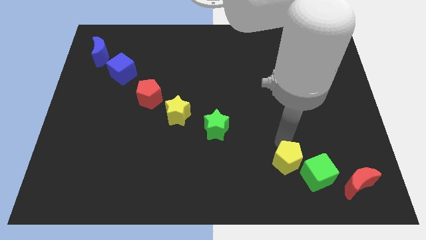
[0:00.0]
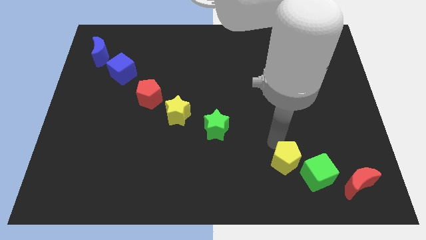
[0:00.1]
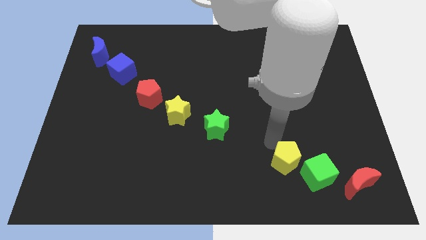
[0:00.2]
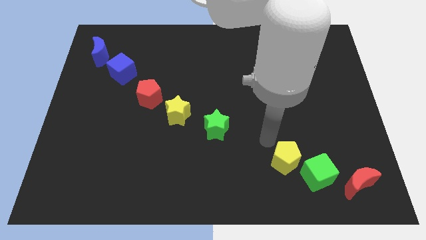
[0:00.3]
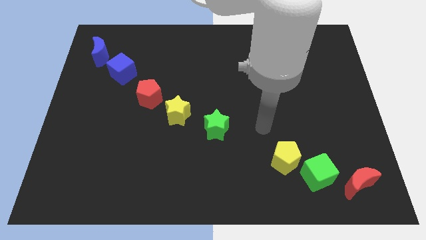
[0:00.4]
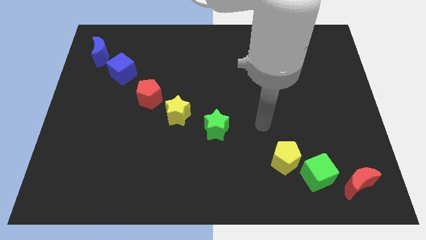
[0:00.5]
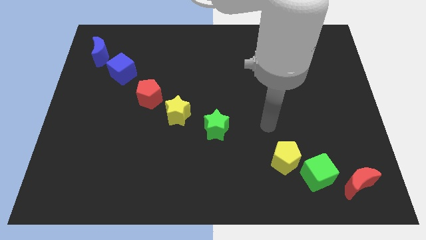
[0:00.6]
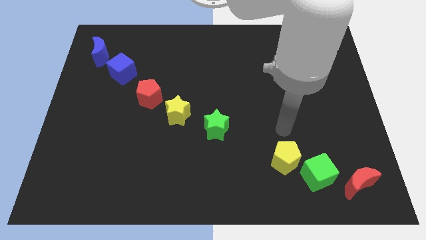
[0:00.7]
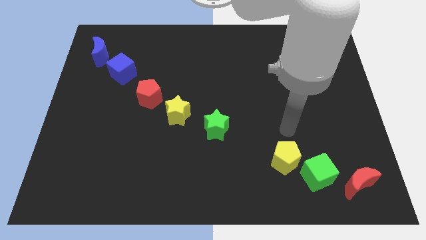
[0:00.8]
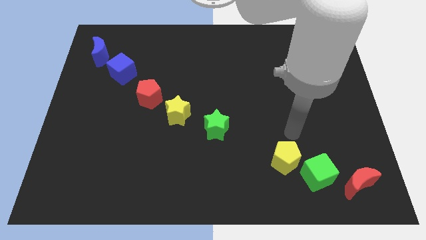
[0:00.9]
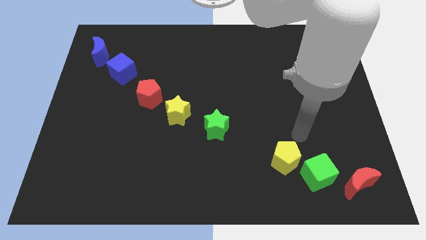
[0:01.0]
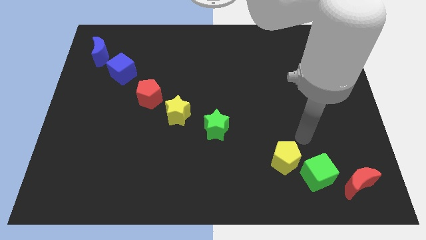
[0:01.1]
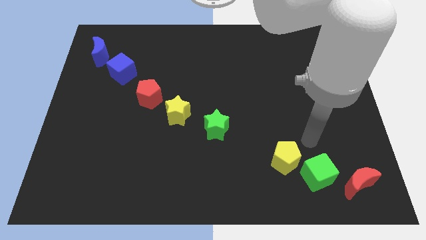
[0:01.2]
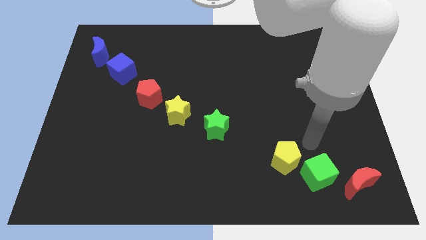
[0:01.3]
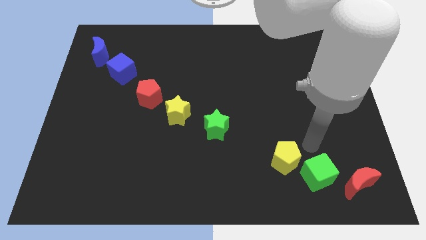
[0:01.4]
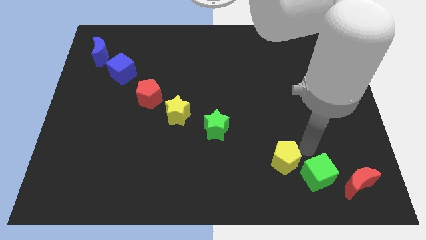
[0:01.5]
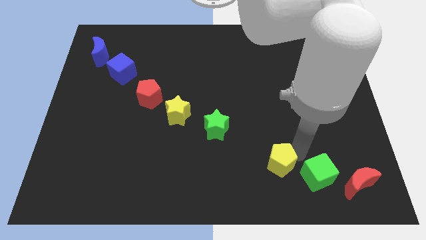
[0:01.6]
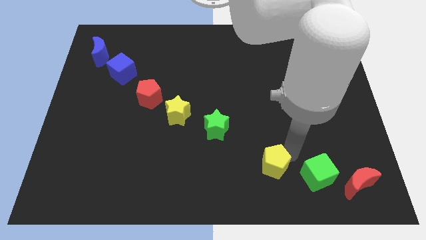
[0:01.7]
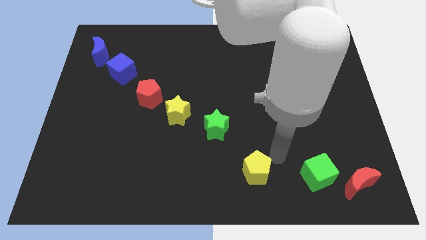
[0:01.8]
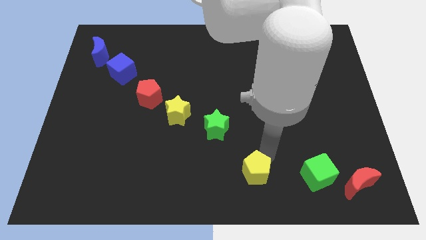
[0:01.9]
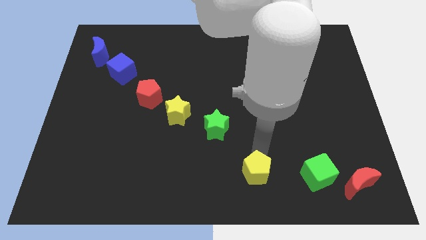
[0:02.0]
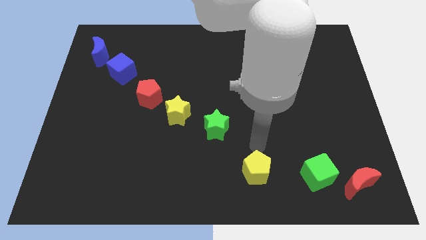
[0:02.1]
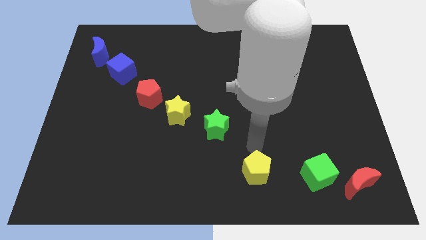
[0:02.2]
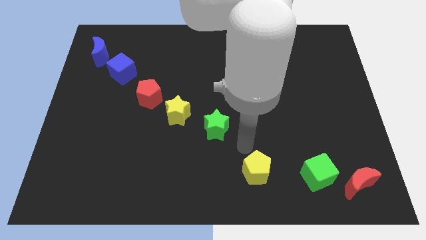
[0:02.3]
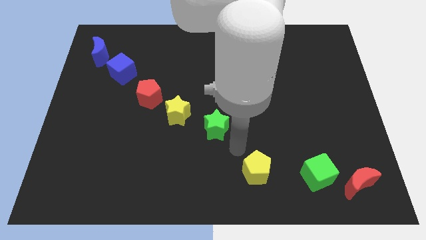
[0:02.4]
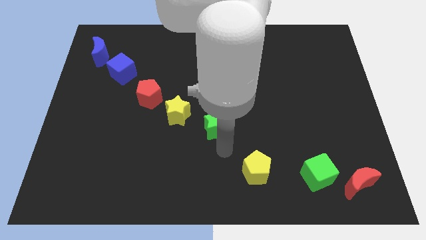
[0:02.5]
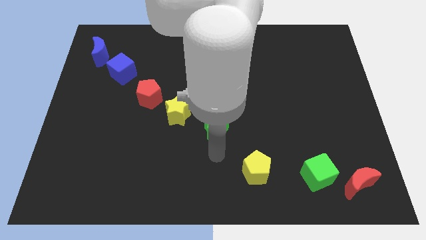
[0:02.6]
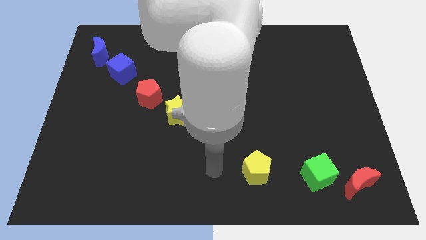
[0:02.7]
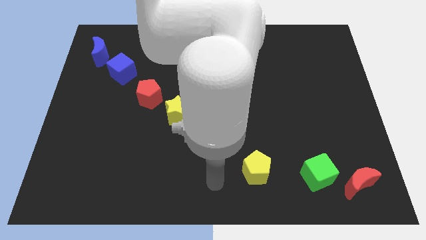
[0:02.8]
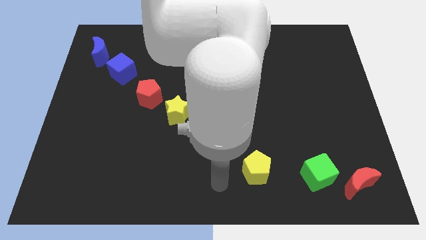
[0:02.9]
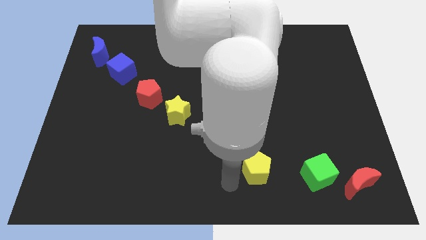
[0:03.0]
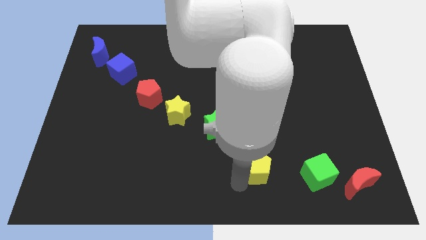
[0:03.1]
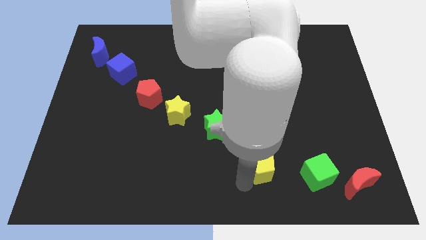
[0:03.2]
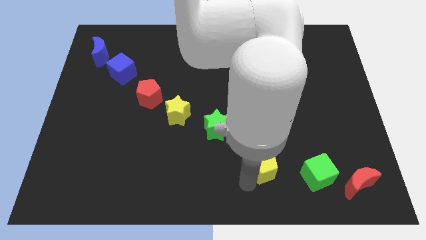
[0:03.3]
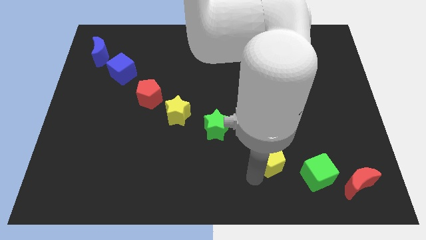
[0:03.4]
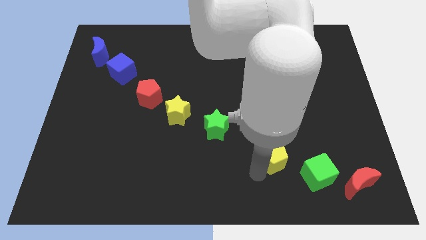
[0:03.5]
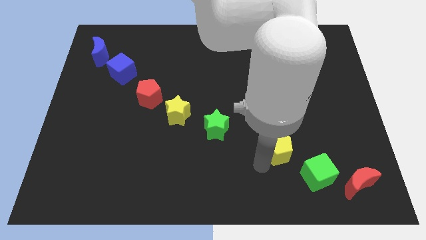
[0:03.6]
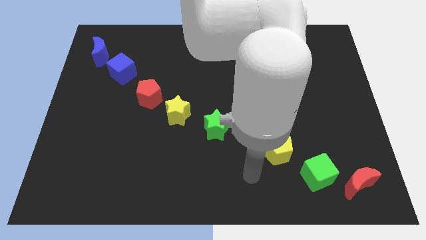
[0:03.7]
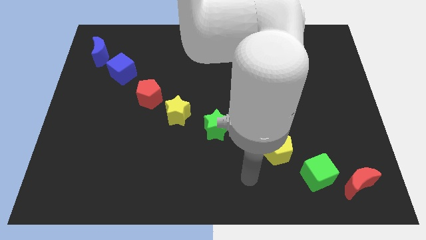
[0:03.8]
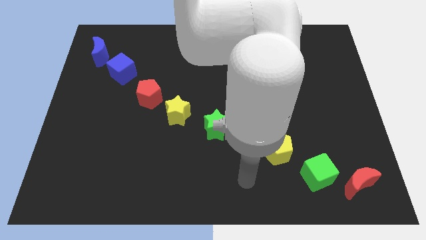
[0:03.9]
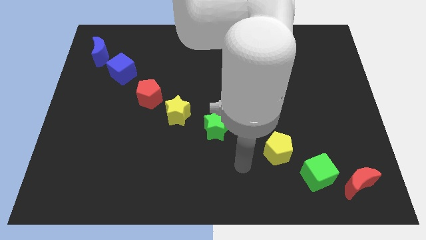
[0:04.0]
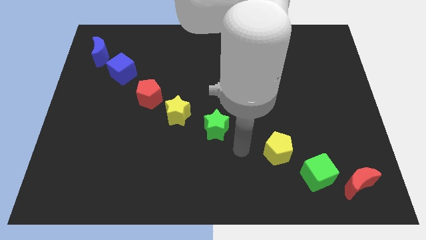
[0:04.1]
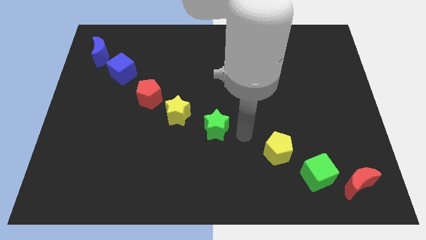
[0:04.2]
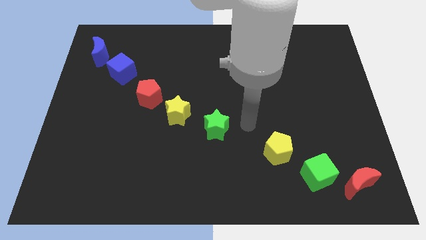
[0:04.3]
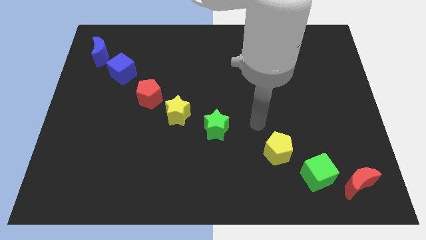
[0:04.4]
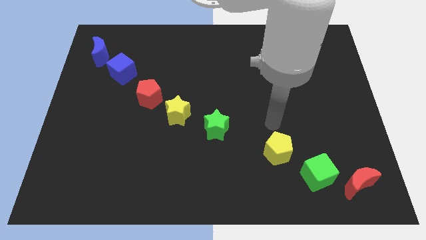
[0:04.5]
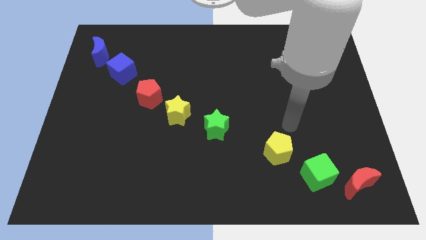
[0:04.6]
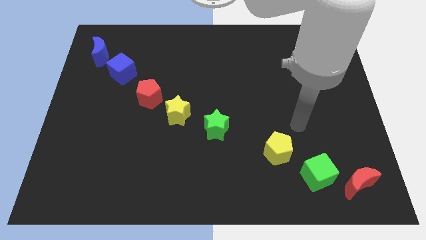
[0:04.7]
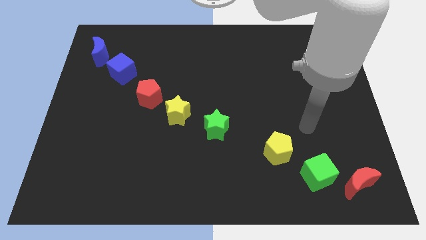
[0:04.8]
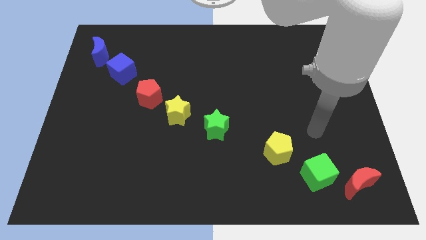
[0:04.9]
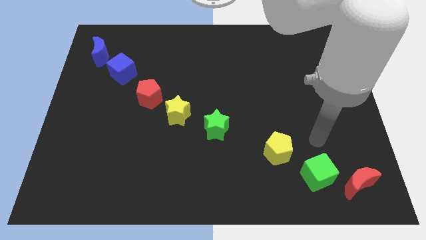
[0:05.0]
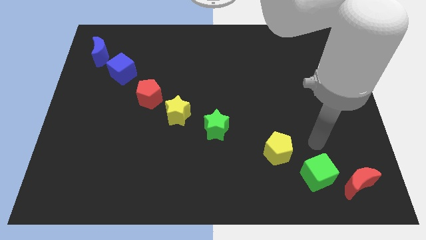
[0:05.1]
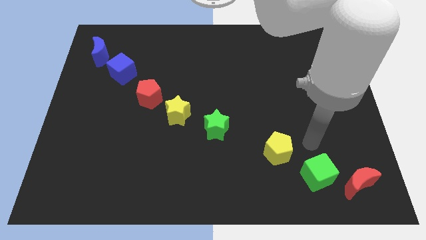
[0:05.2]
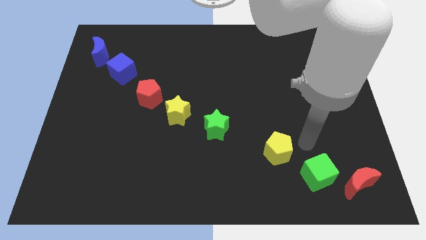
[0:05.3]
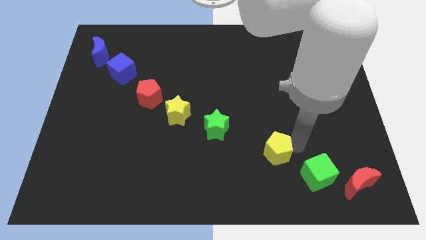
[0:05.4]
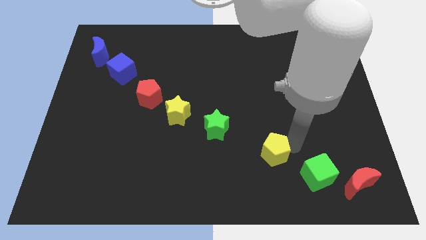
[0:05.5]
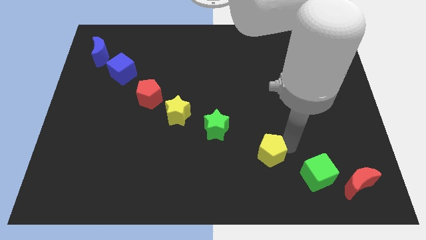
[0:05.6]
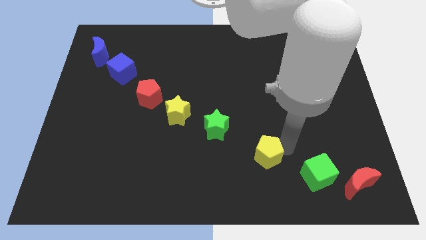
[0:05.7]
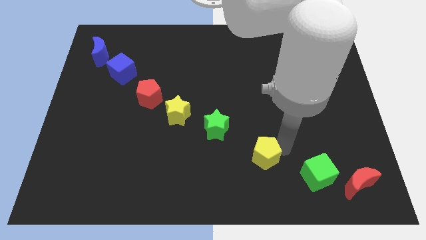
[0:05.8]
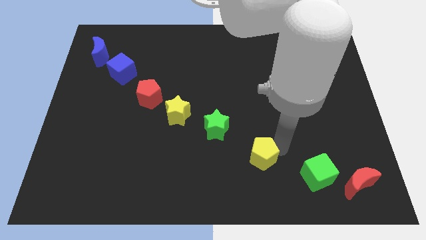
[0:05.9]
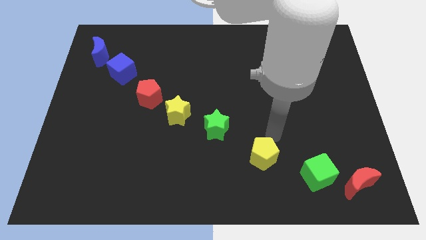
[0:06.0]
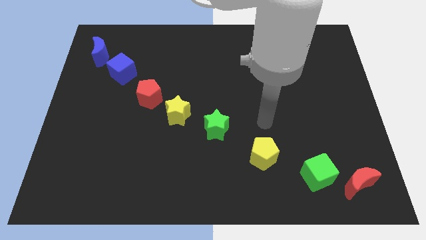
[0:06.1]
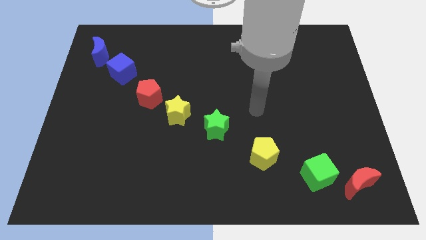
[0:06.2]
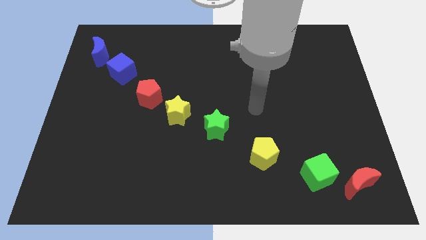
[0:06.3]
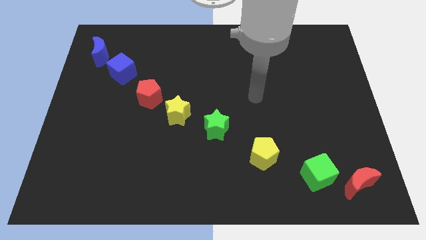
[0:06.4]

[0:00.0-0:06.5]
push the yellow pentagon in between the green blocks

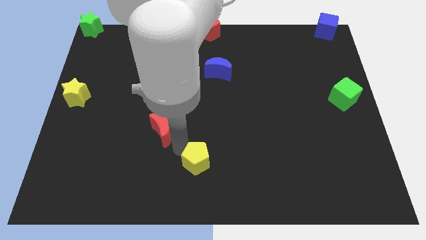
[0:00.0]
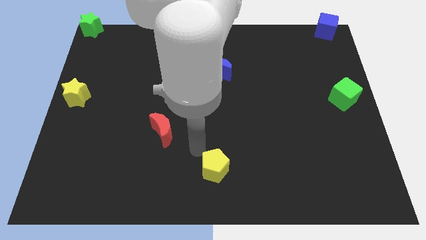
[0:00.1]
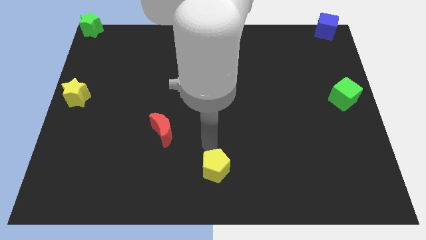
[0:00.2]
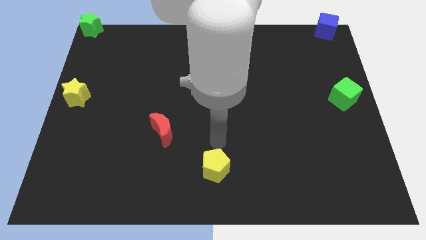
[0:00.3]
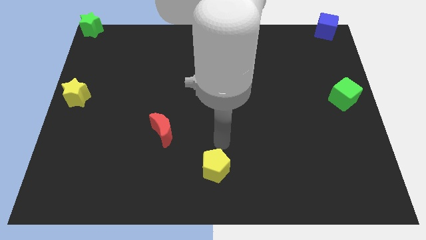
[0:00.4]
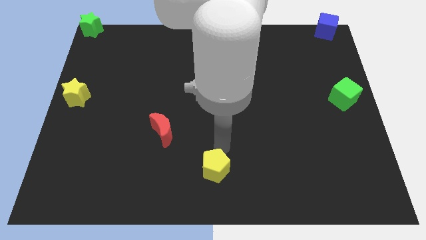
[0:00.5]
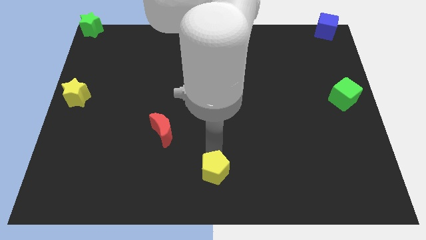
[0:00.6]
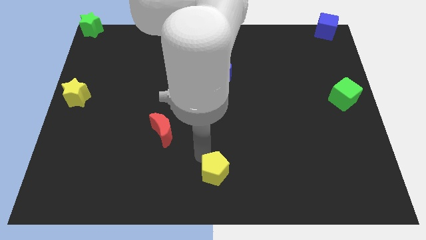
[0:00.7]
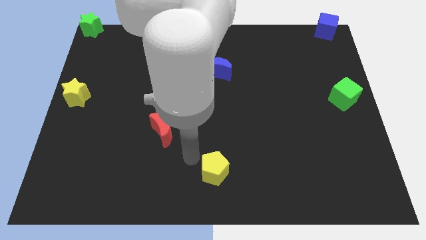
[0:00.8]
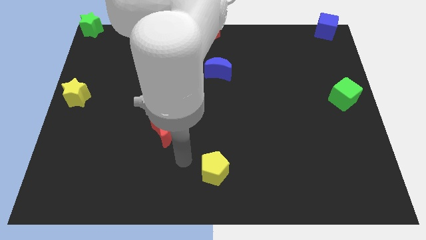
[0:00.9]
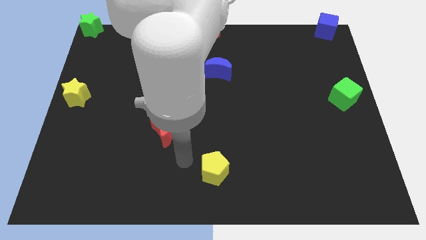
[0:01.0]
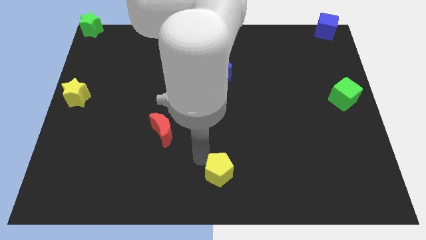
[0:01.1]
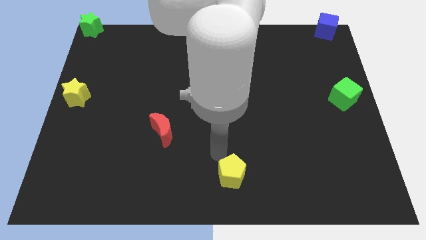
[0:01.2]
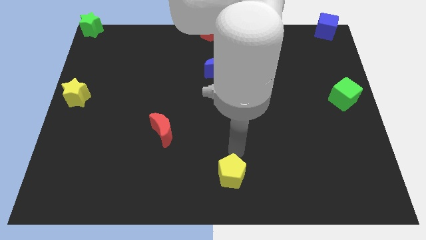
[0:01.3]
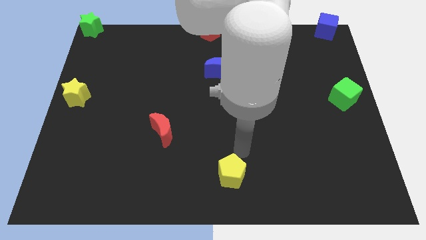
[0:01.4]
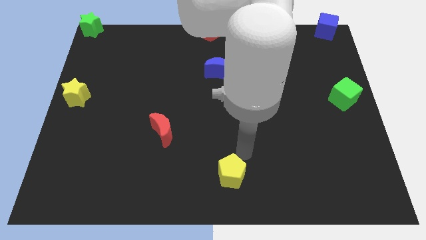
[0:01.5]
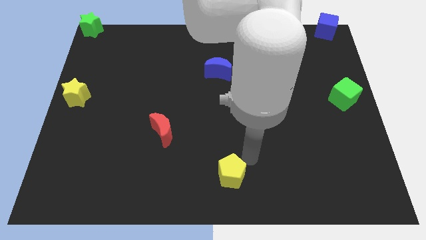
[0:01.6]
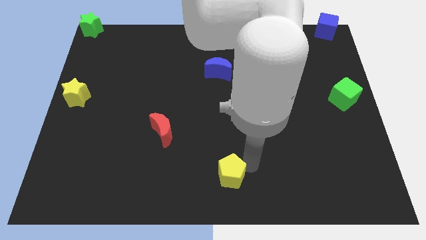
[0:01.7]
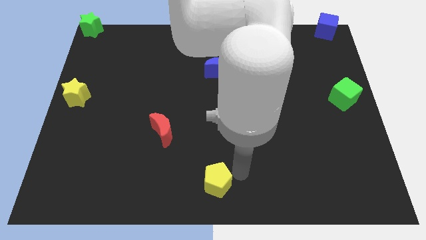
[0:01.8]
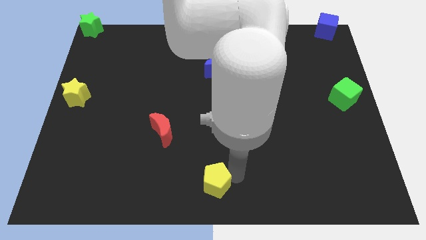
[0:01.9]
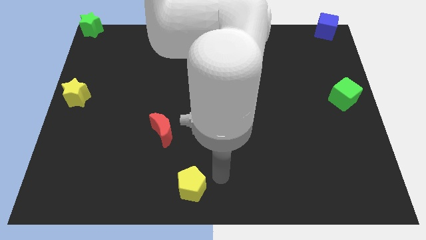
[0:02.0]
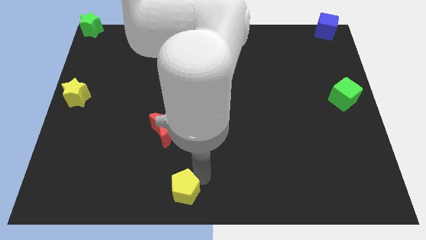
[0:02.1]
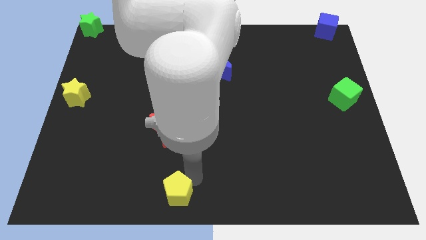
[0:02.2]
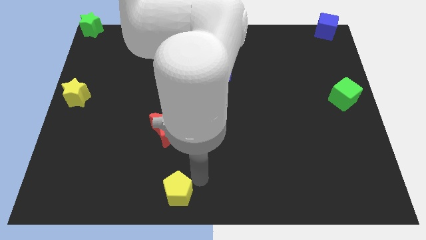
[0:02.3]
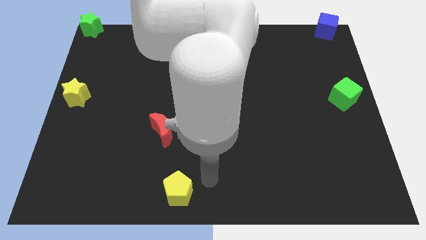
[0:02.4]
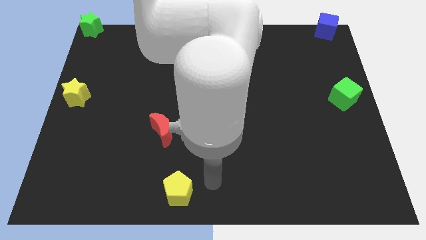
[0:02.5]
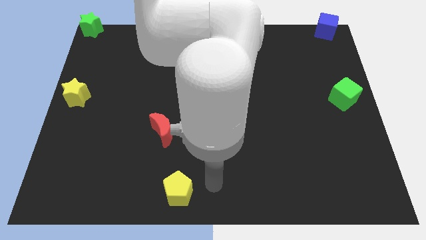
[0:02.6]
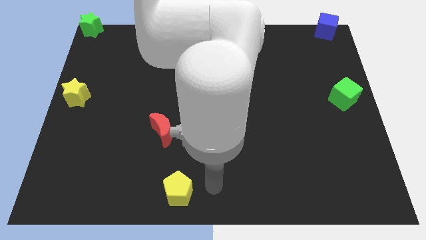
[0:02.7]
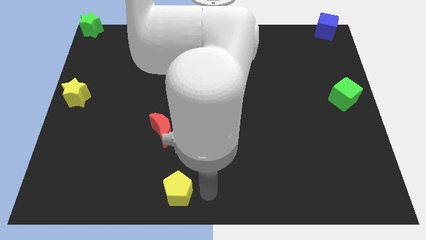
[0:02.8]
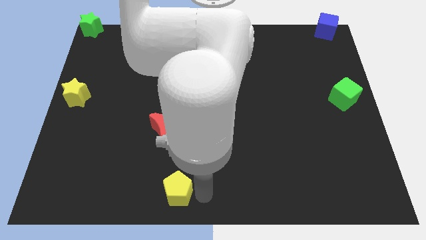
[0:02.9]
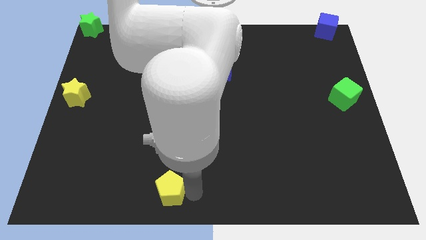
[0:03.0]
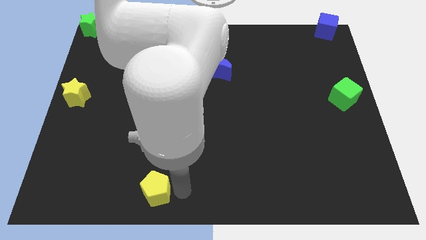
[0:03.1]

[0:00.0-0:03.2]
place the yellow pentagon down to the red moon
